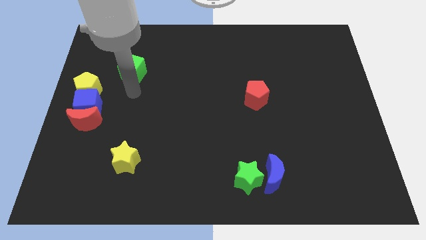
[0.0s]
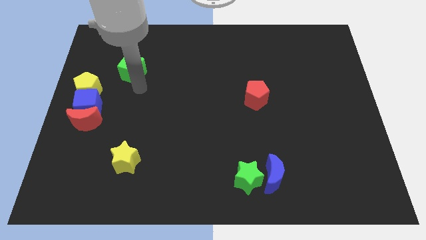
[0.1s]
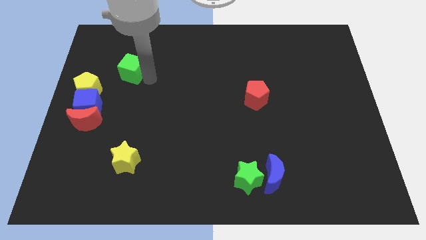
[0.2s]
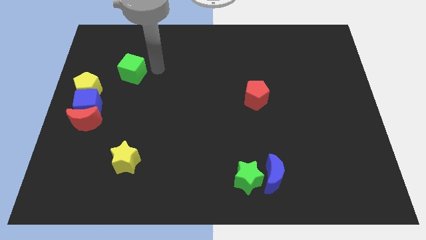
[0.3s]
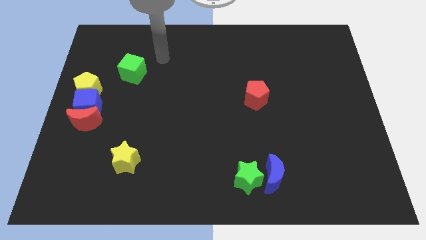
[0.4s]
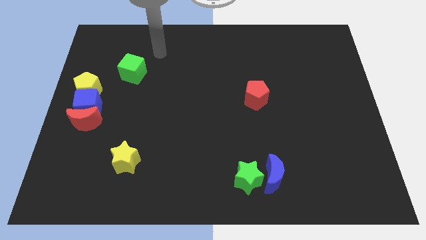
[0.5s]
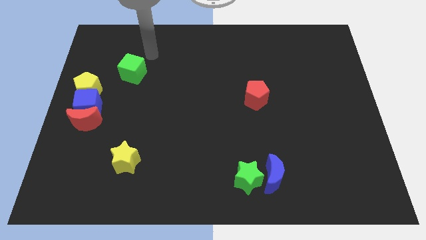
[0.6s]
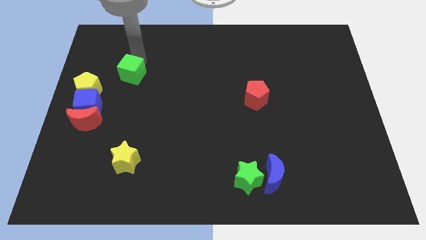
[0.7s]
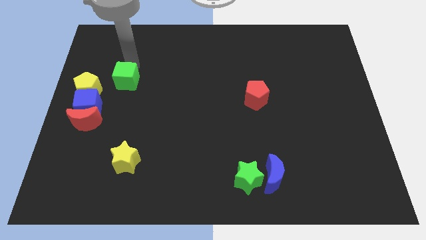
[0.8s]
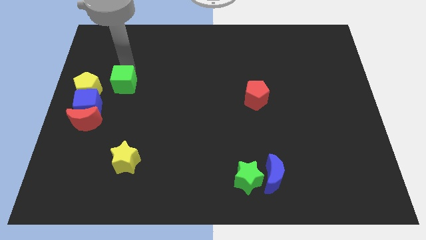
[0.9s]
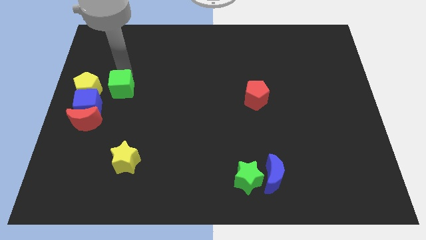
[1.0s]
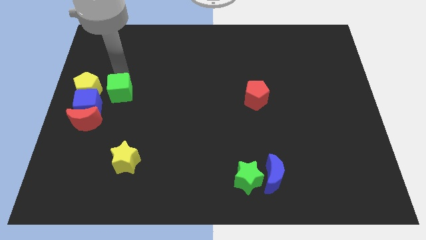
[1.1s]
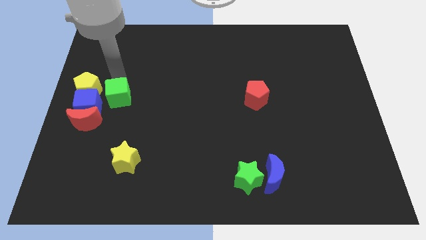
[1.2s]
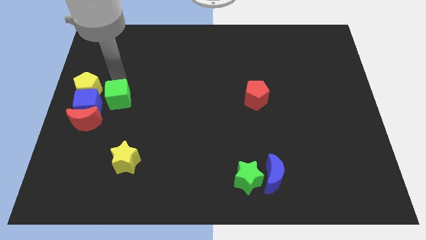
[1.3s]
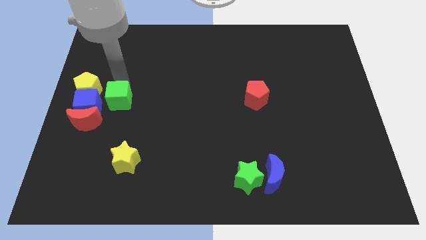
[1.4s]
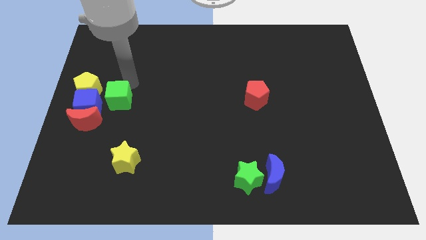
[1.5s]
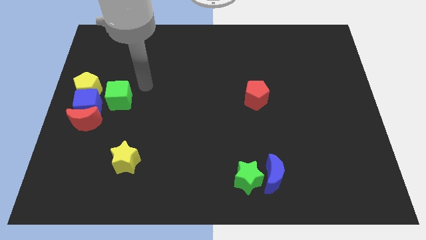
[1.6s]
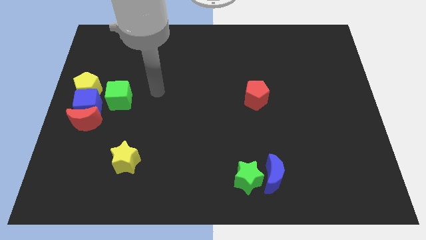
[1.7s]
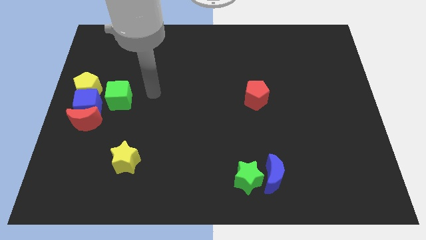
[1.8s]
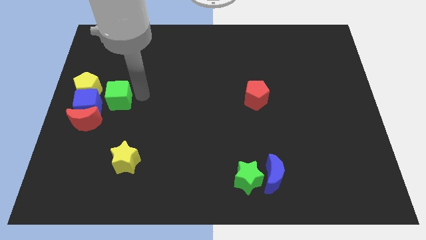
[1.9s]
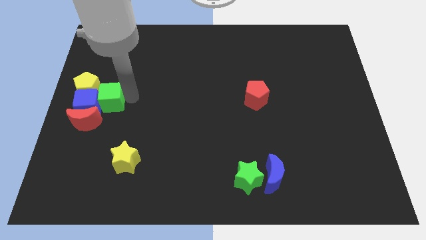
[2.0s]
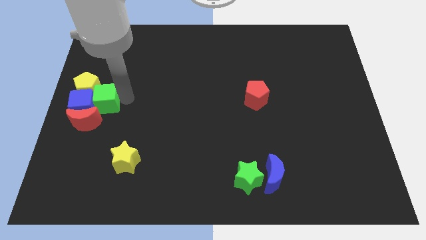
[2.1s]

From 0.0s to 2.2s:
move the green cube to the right into the blue cube

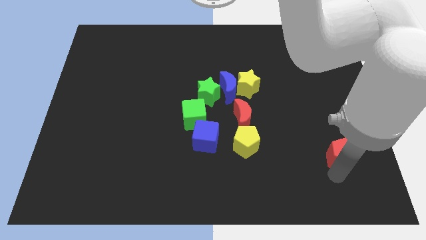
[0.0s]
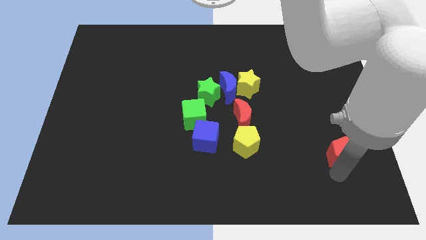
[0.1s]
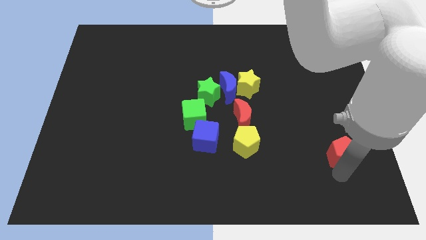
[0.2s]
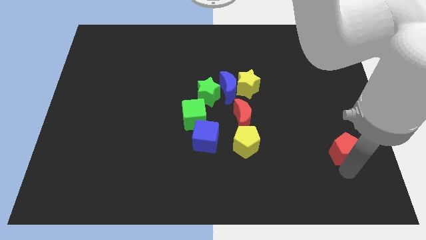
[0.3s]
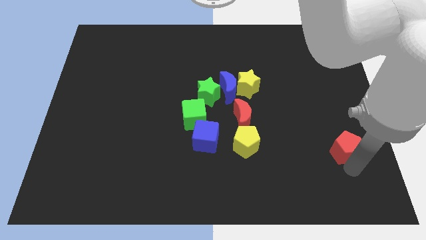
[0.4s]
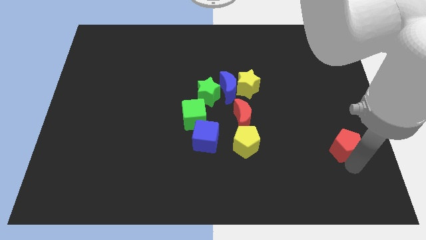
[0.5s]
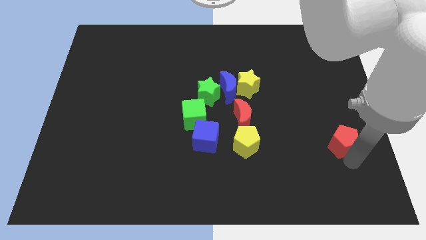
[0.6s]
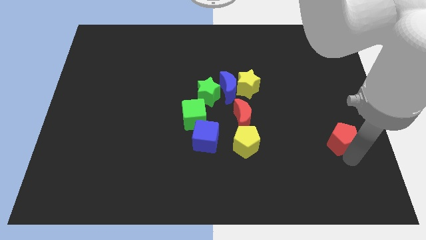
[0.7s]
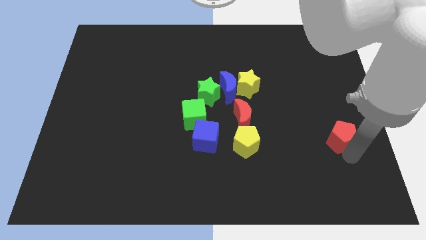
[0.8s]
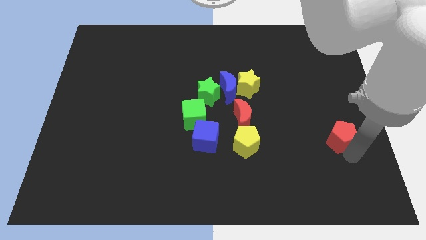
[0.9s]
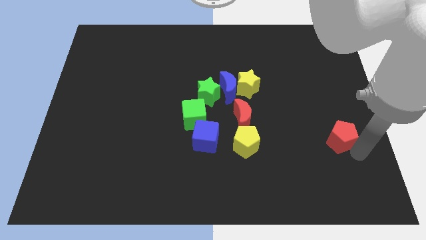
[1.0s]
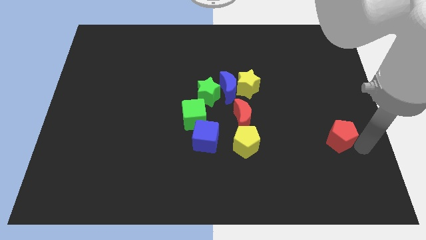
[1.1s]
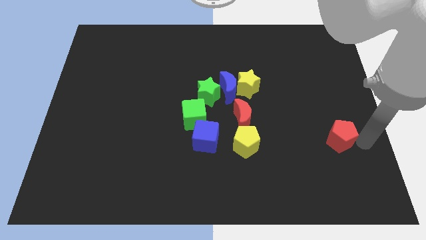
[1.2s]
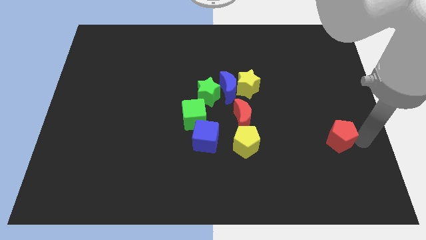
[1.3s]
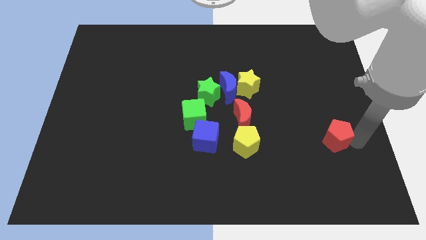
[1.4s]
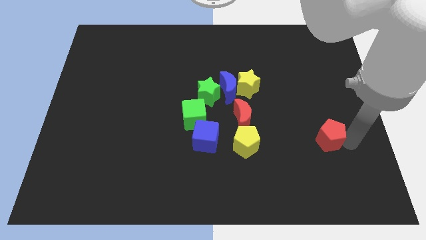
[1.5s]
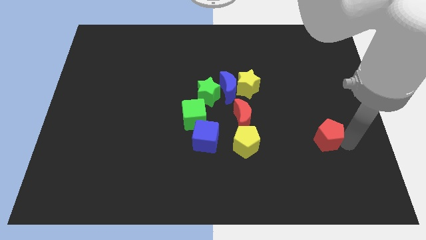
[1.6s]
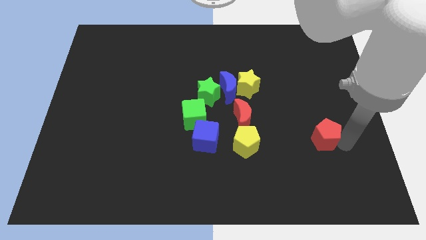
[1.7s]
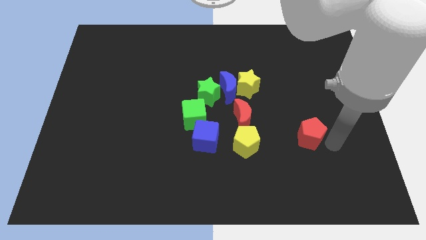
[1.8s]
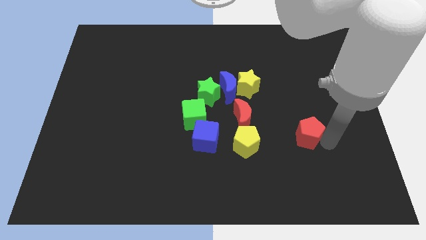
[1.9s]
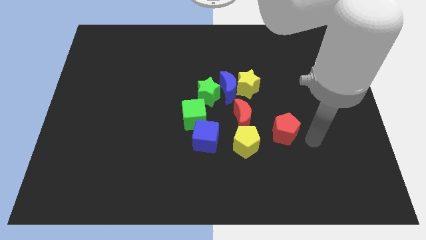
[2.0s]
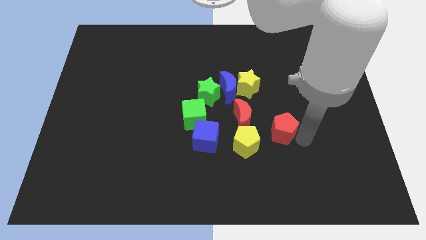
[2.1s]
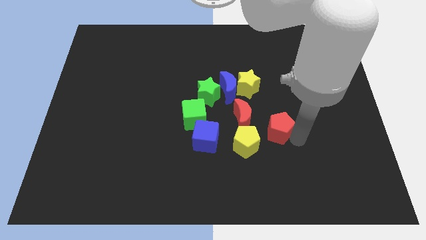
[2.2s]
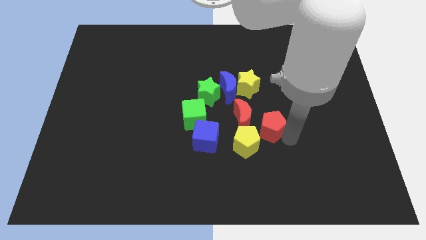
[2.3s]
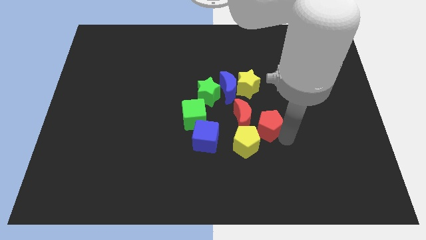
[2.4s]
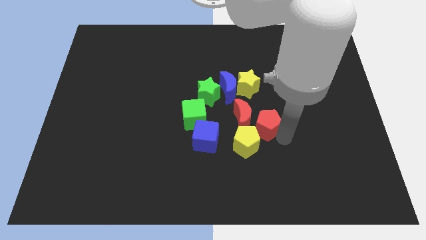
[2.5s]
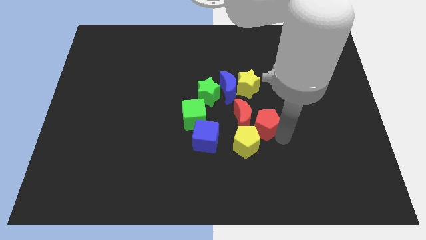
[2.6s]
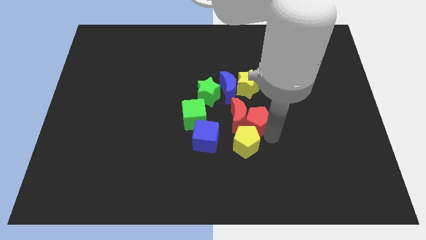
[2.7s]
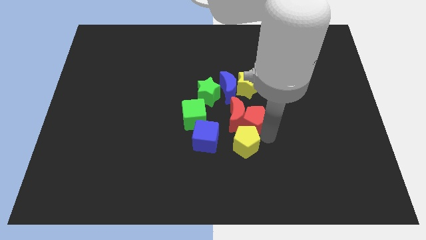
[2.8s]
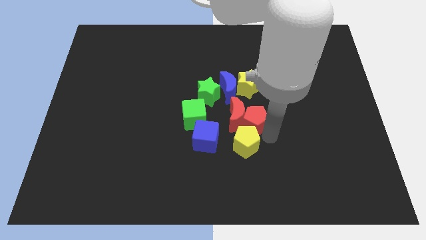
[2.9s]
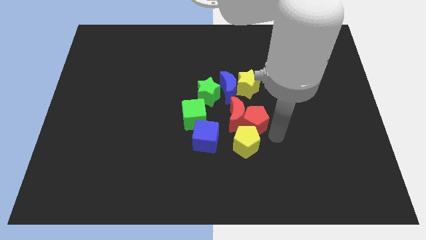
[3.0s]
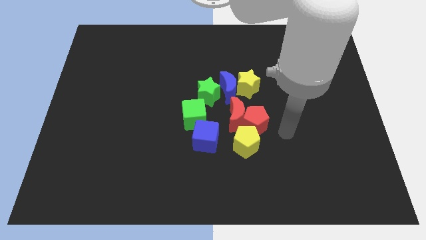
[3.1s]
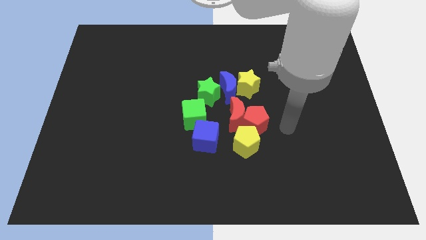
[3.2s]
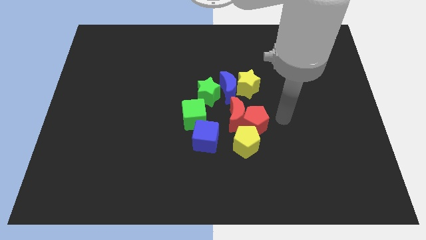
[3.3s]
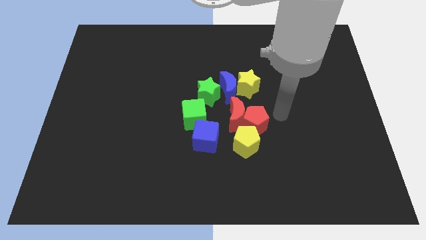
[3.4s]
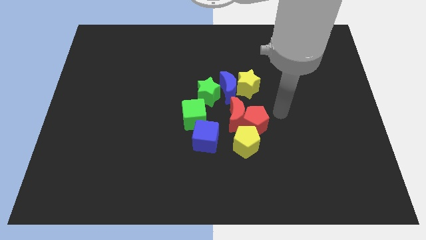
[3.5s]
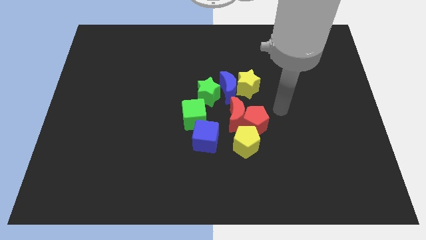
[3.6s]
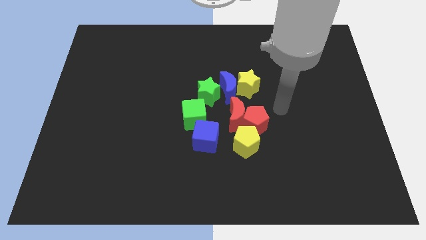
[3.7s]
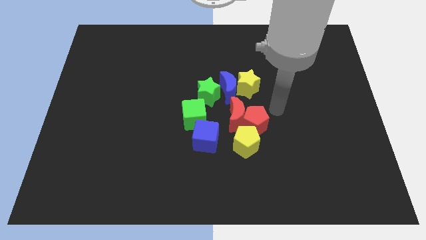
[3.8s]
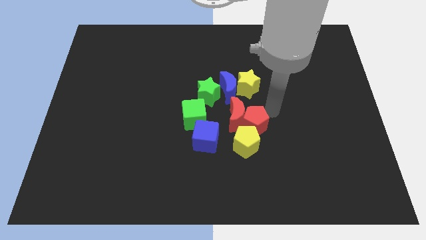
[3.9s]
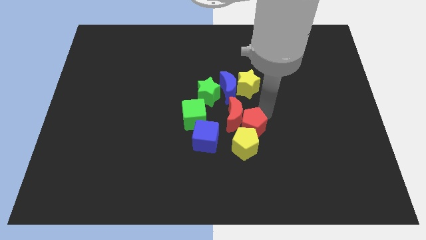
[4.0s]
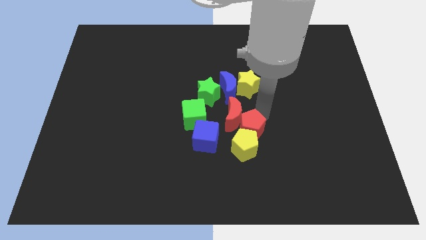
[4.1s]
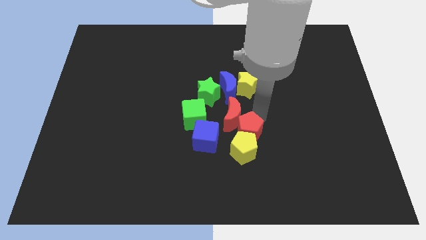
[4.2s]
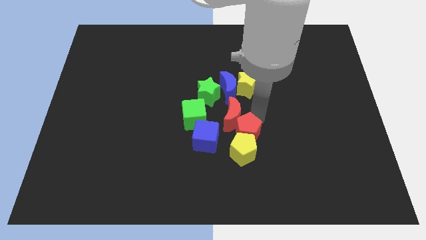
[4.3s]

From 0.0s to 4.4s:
push the red pentagon in to the yellow pentagon

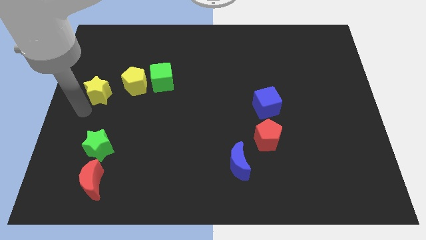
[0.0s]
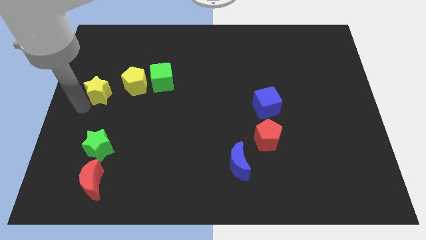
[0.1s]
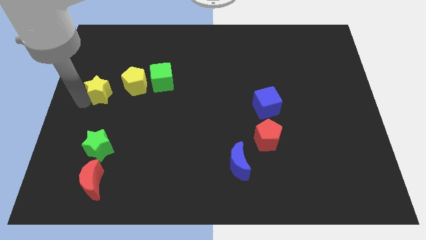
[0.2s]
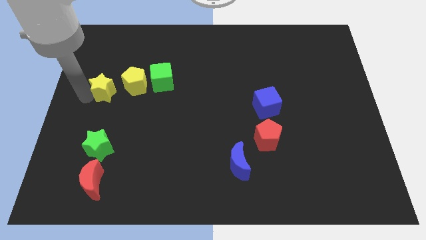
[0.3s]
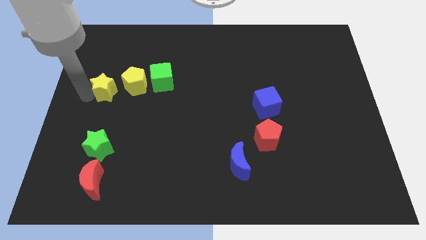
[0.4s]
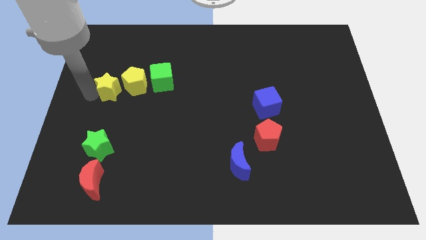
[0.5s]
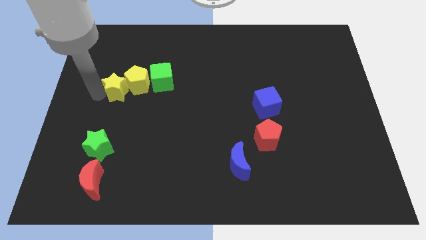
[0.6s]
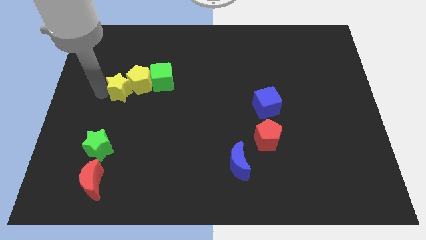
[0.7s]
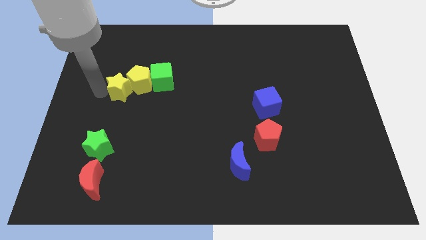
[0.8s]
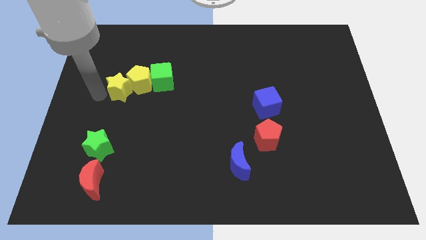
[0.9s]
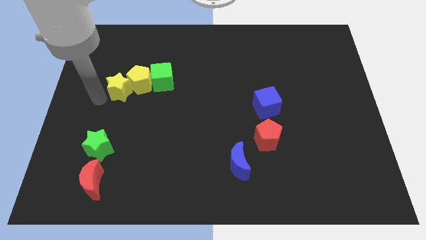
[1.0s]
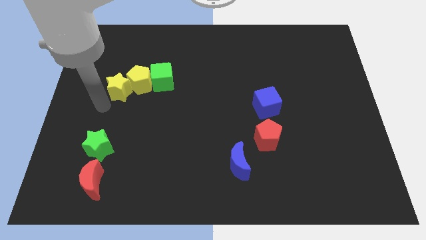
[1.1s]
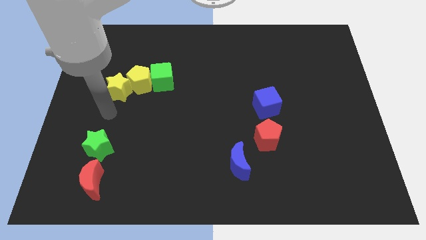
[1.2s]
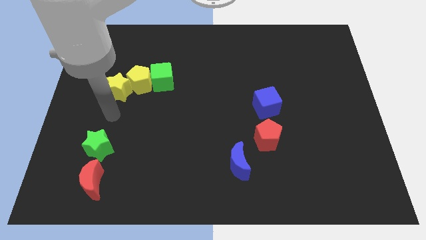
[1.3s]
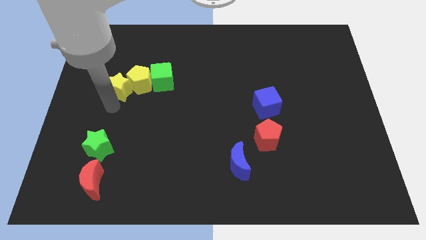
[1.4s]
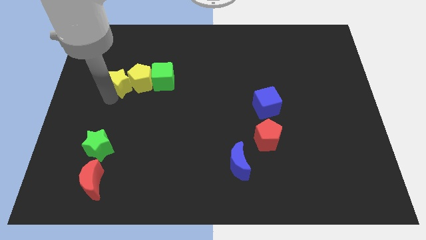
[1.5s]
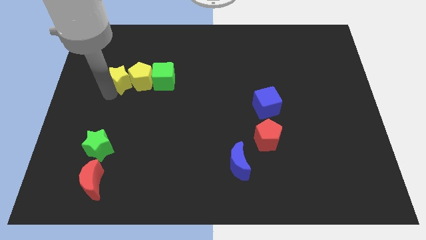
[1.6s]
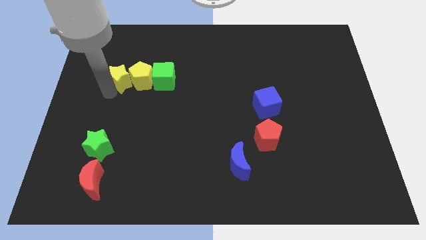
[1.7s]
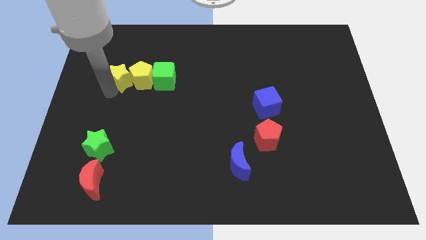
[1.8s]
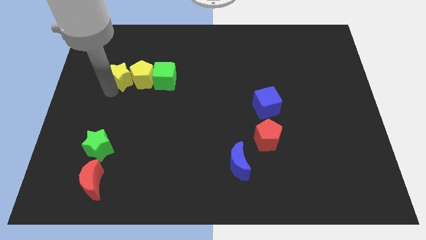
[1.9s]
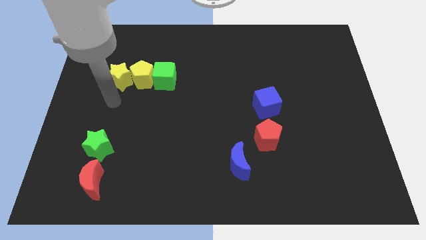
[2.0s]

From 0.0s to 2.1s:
push the yellow star and yellow pentagon up

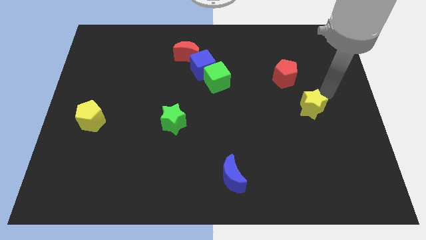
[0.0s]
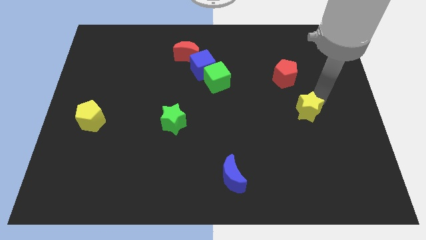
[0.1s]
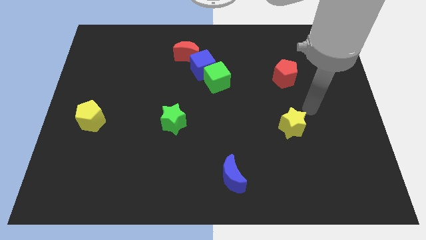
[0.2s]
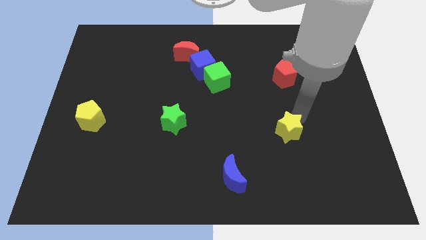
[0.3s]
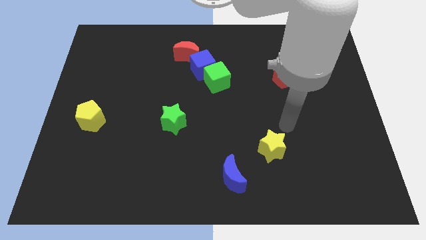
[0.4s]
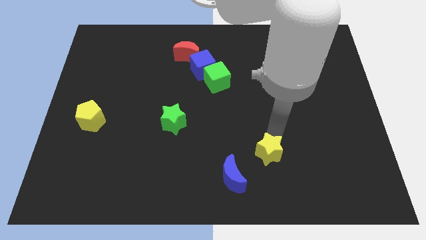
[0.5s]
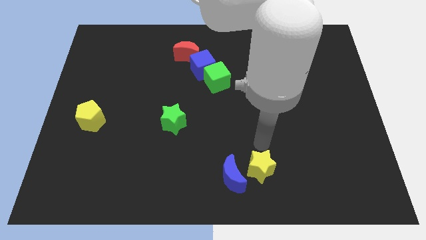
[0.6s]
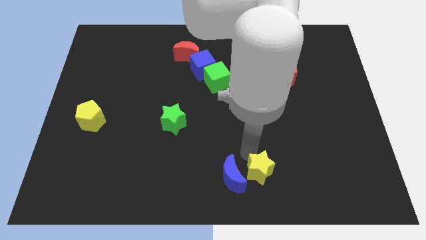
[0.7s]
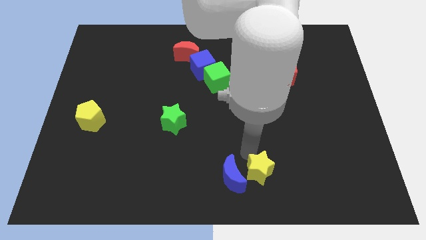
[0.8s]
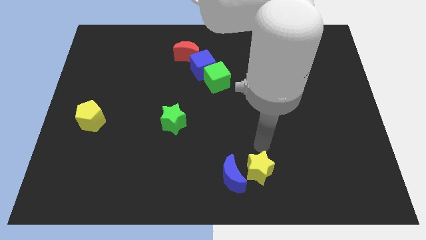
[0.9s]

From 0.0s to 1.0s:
place the yellow star to the right side of blue crescent
